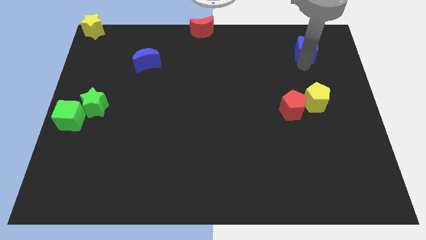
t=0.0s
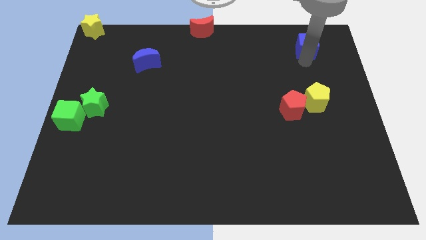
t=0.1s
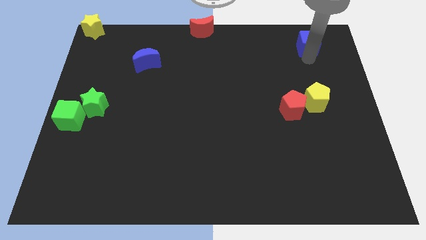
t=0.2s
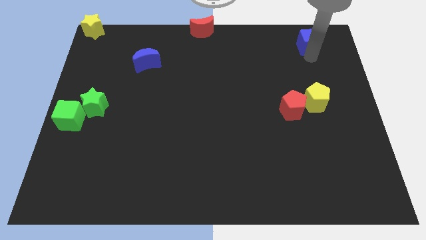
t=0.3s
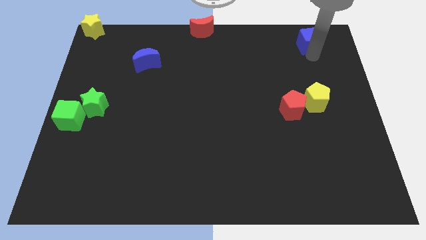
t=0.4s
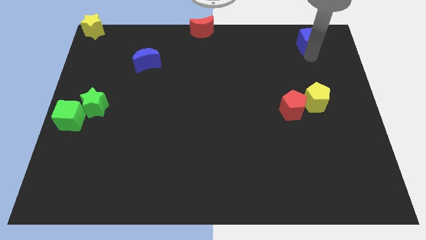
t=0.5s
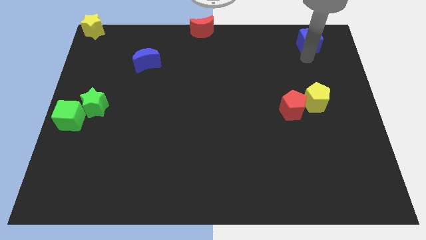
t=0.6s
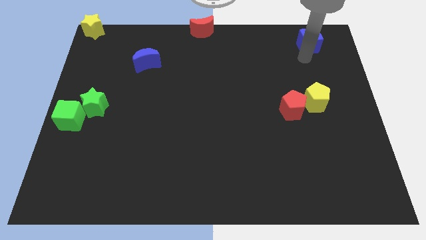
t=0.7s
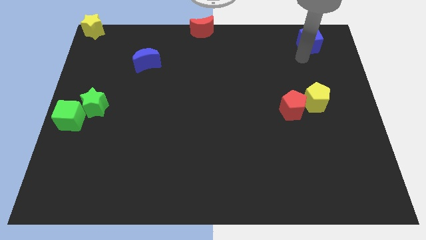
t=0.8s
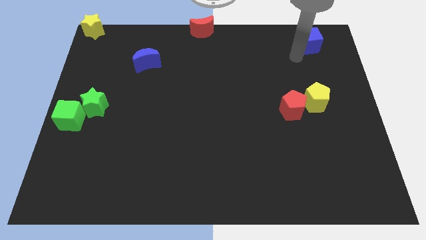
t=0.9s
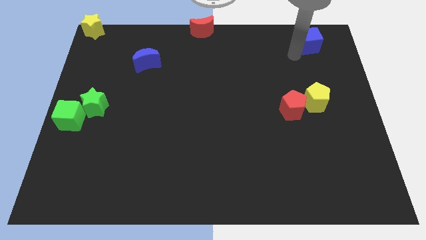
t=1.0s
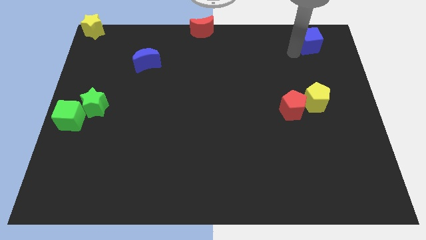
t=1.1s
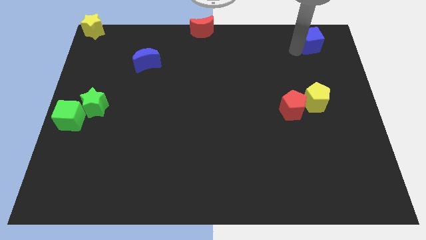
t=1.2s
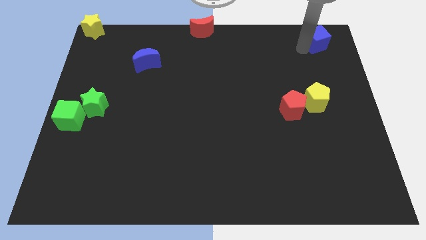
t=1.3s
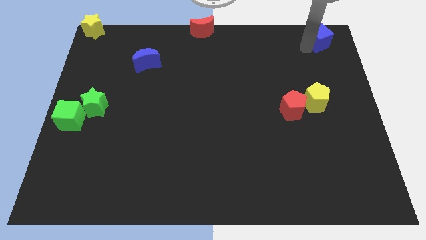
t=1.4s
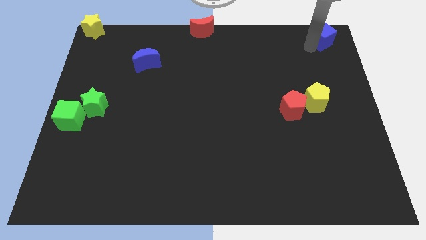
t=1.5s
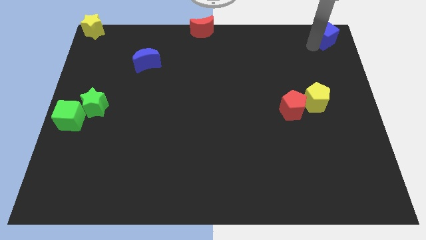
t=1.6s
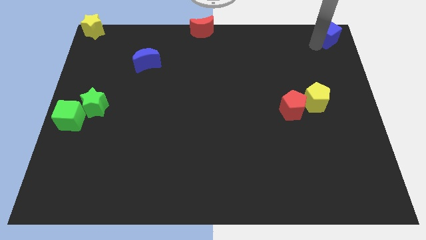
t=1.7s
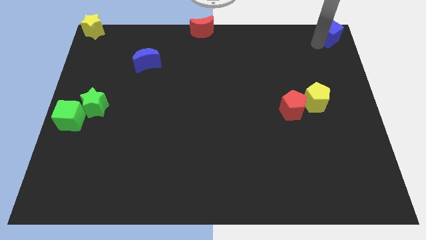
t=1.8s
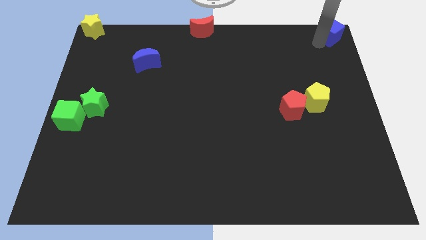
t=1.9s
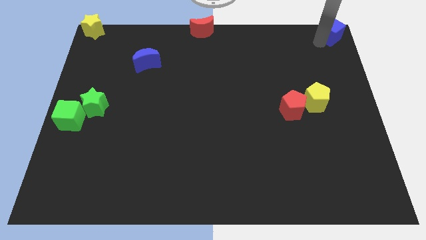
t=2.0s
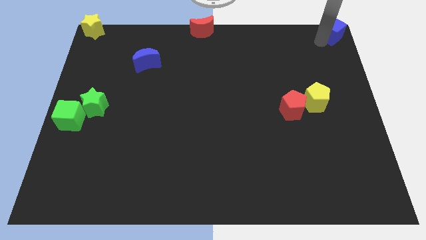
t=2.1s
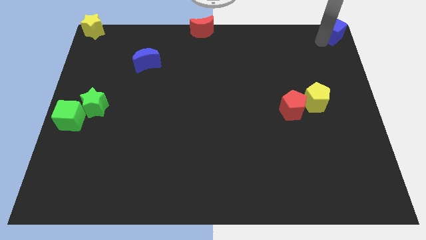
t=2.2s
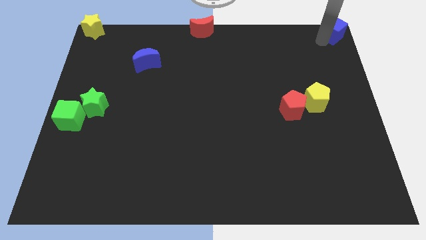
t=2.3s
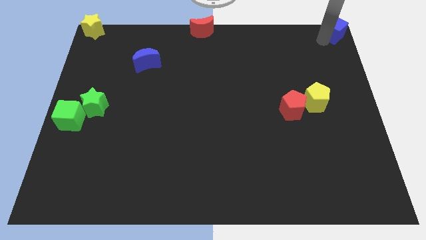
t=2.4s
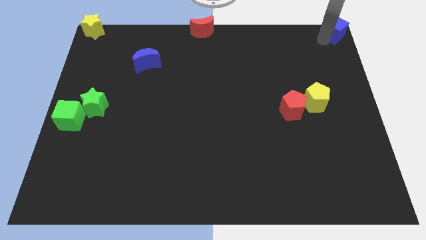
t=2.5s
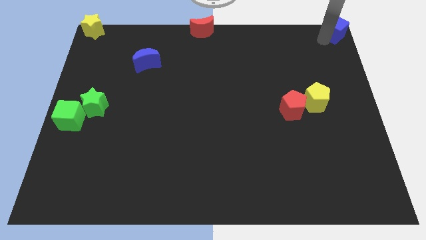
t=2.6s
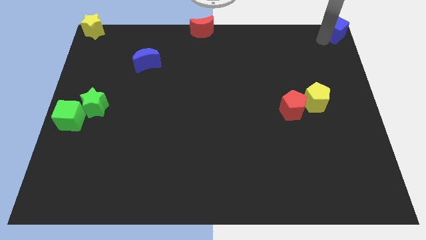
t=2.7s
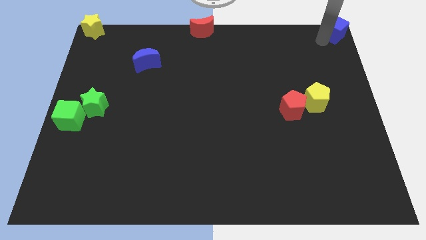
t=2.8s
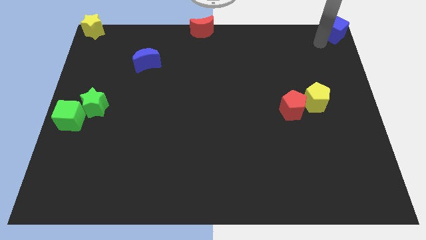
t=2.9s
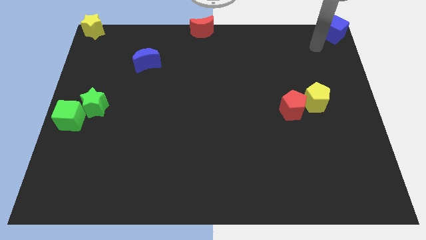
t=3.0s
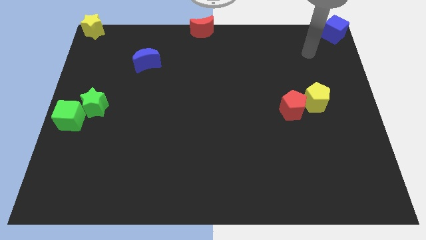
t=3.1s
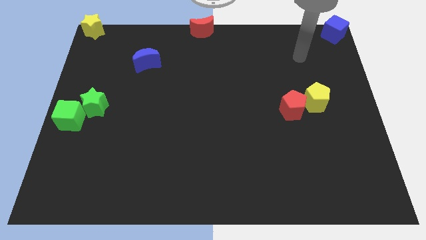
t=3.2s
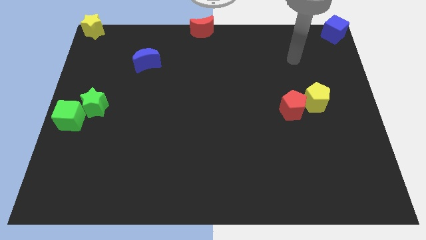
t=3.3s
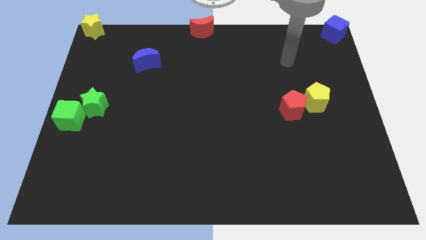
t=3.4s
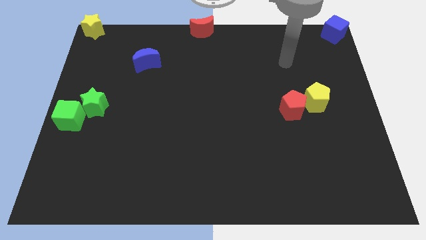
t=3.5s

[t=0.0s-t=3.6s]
move the blue cube to the top right

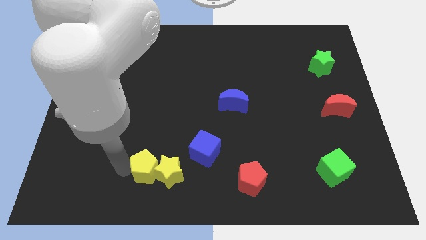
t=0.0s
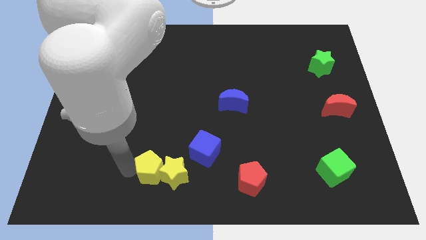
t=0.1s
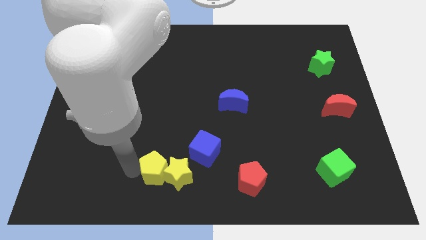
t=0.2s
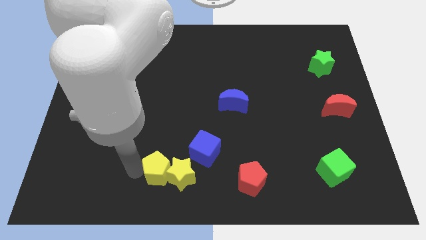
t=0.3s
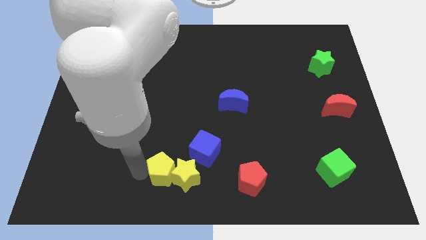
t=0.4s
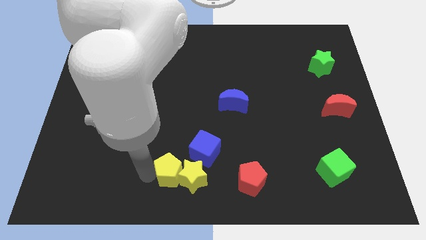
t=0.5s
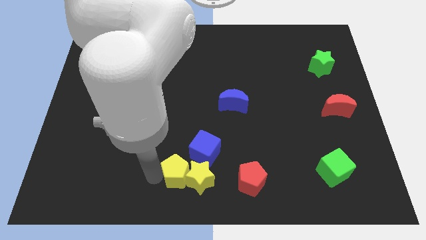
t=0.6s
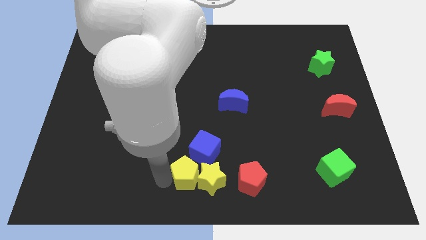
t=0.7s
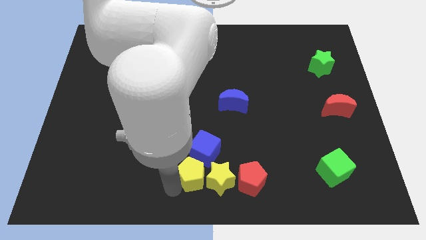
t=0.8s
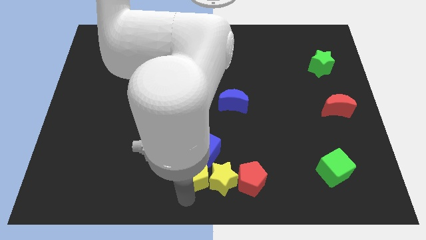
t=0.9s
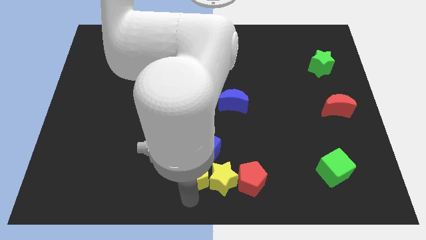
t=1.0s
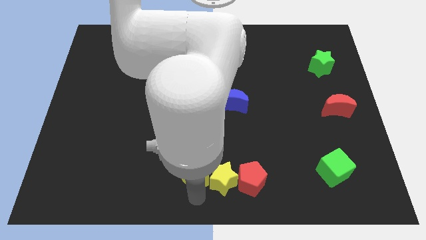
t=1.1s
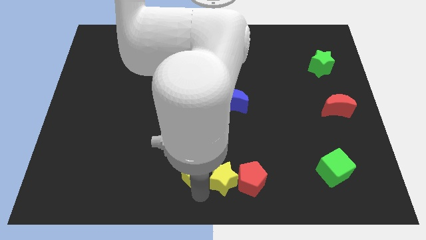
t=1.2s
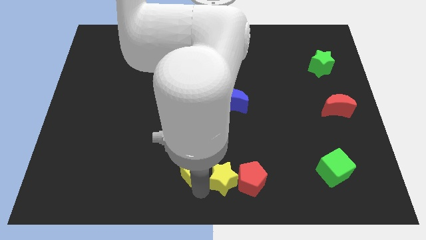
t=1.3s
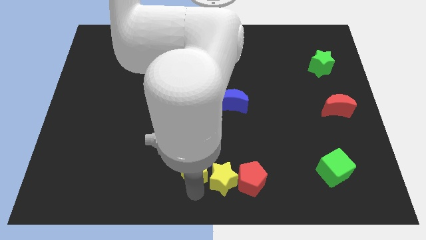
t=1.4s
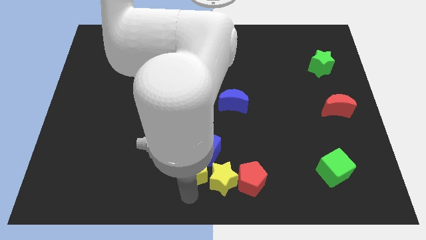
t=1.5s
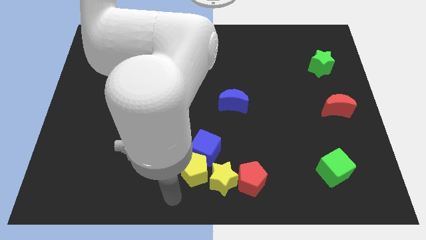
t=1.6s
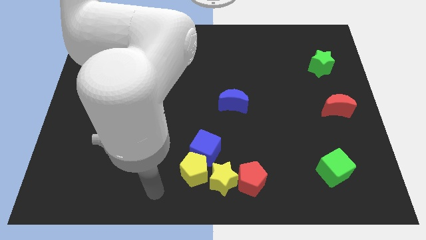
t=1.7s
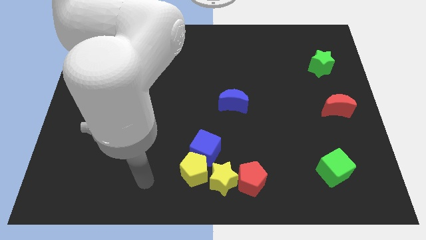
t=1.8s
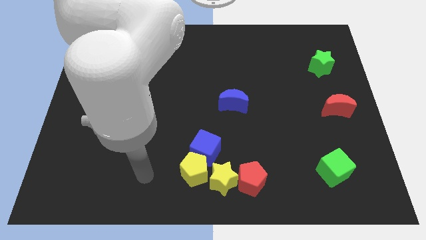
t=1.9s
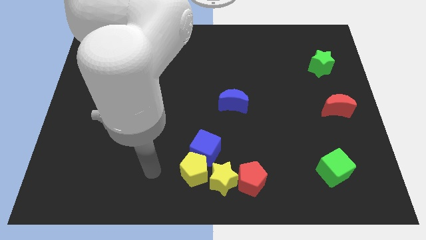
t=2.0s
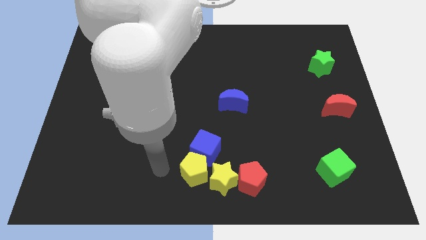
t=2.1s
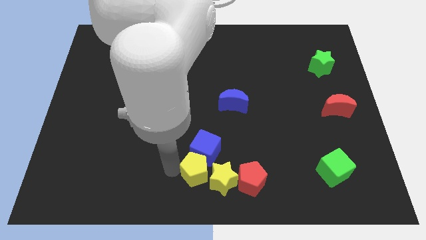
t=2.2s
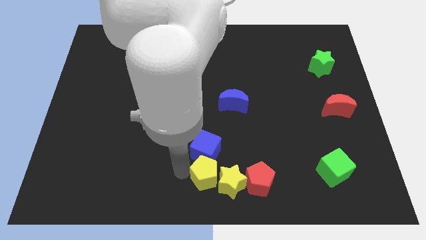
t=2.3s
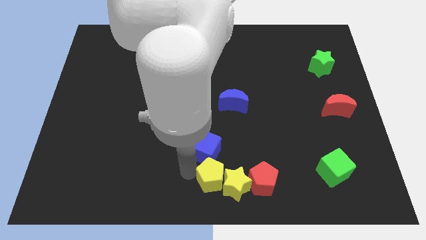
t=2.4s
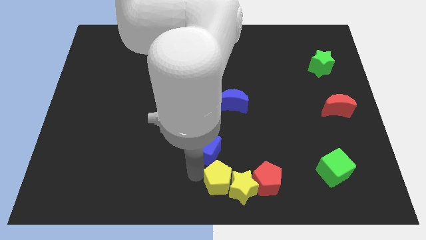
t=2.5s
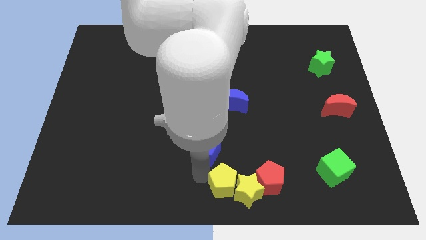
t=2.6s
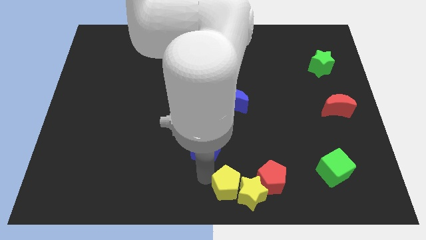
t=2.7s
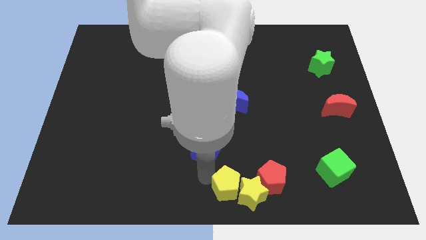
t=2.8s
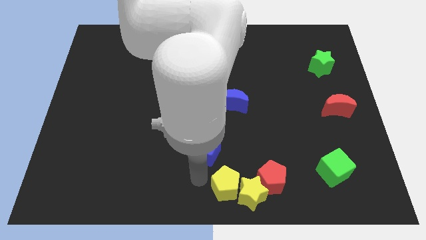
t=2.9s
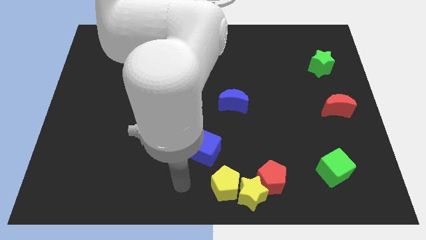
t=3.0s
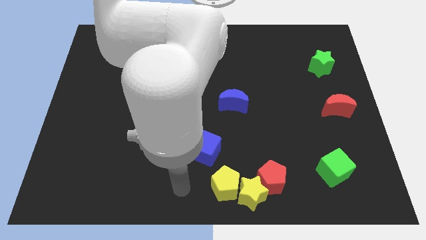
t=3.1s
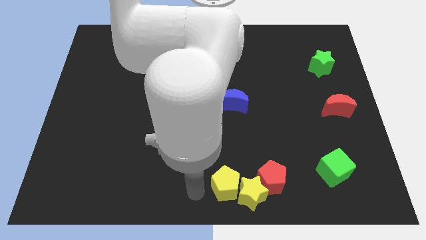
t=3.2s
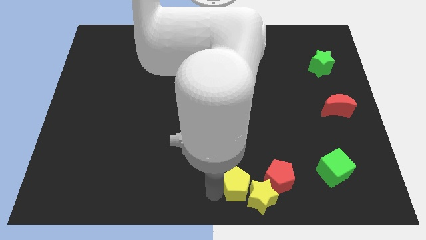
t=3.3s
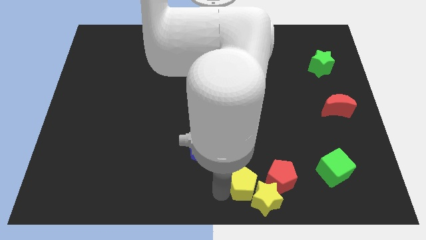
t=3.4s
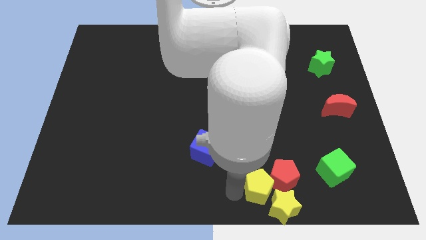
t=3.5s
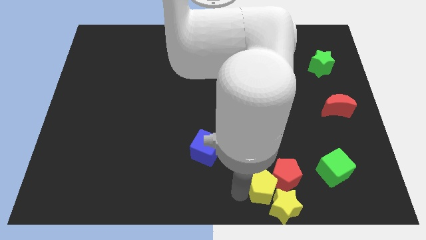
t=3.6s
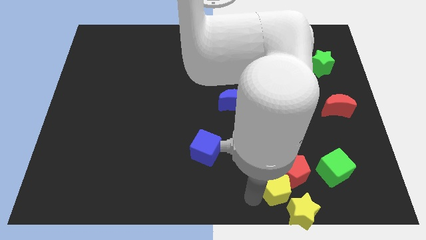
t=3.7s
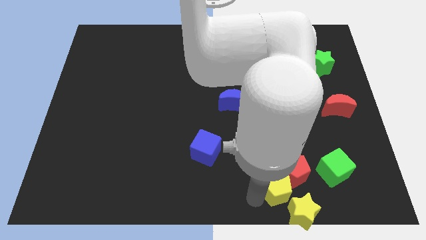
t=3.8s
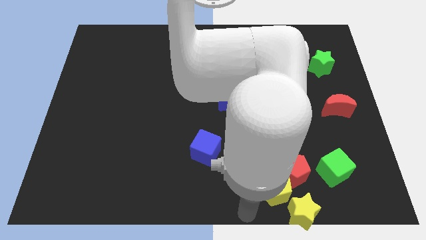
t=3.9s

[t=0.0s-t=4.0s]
push the yellow pentagon into the red pentagon

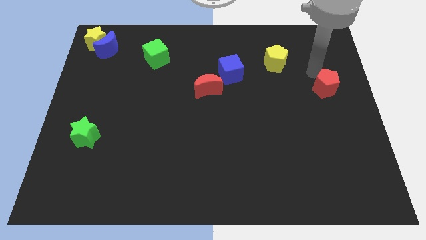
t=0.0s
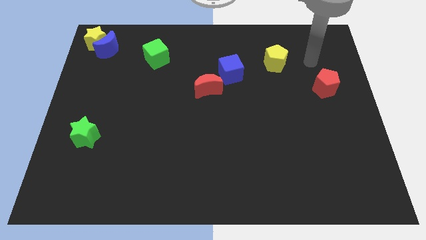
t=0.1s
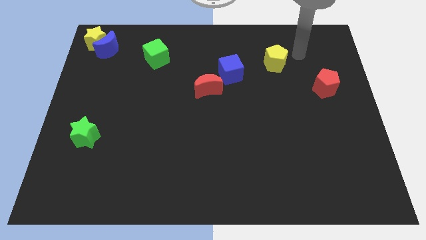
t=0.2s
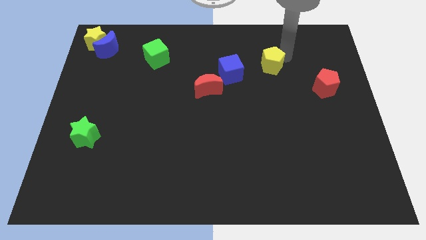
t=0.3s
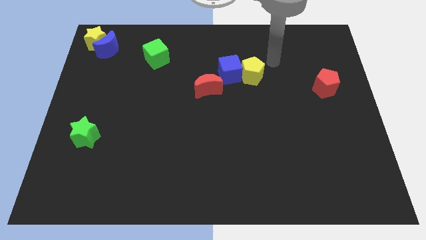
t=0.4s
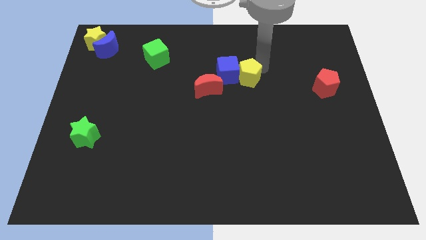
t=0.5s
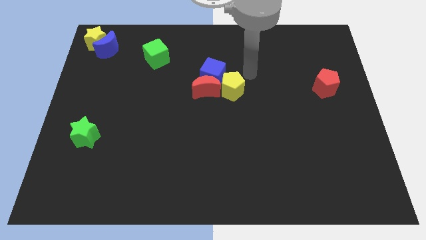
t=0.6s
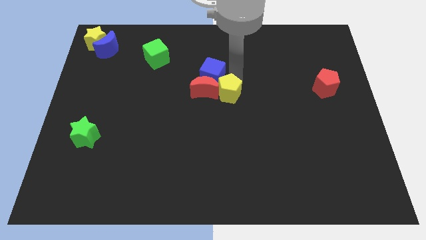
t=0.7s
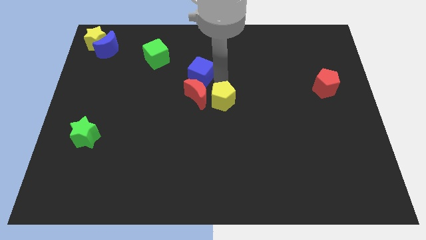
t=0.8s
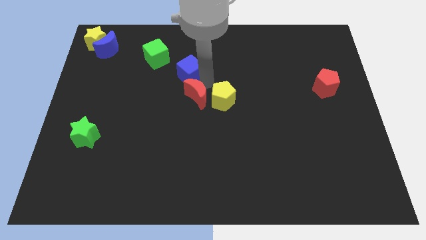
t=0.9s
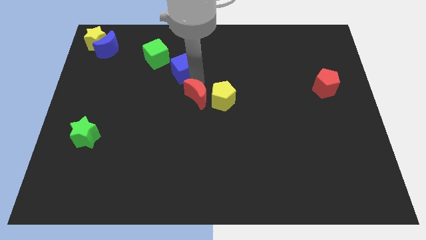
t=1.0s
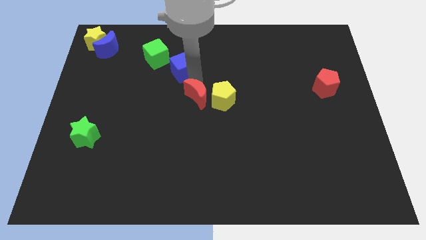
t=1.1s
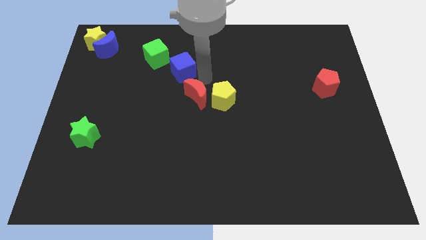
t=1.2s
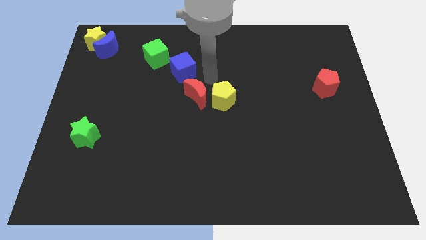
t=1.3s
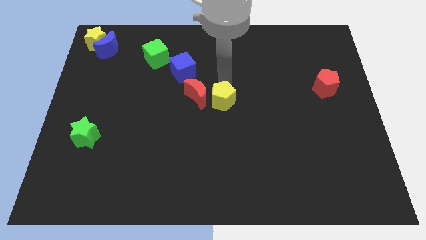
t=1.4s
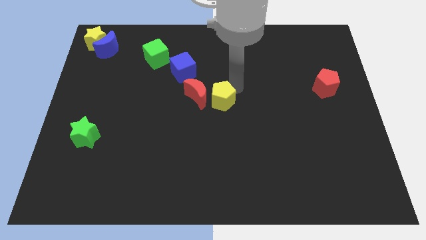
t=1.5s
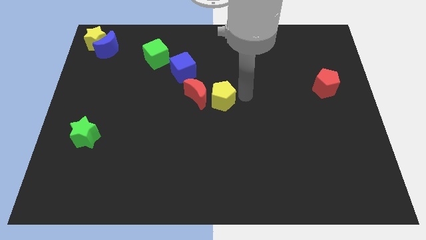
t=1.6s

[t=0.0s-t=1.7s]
push the blue cube diagonally to the top right of the green star
